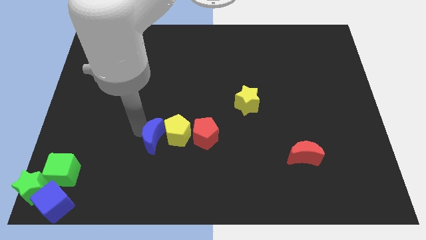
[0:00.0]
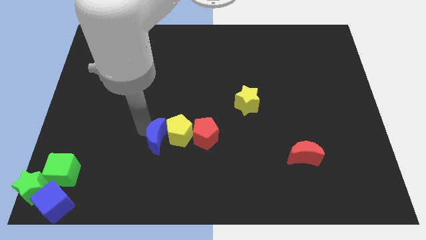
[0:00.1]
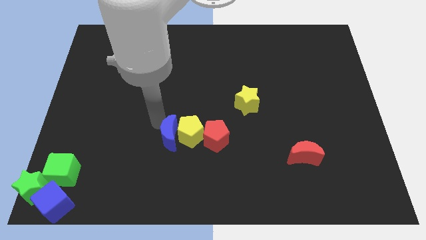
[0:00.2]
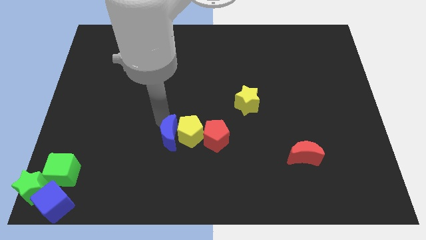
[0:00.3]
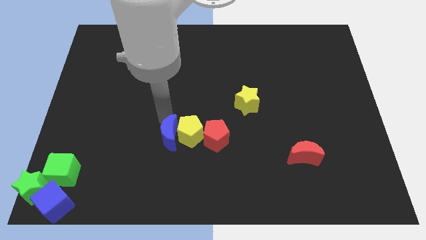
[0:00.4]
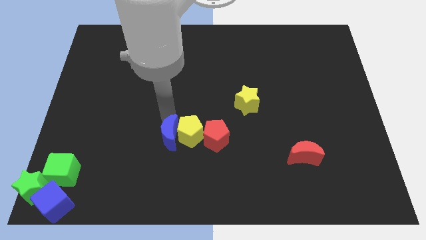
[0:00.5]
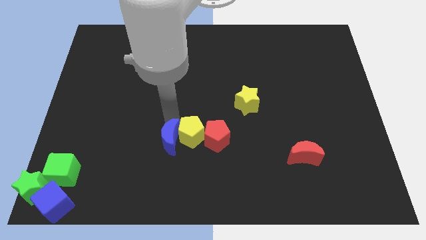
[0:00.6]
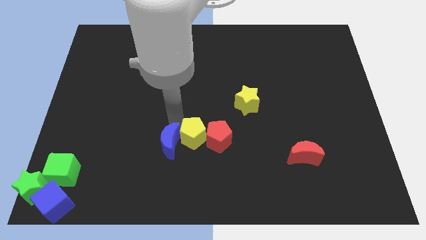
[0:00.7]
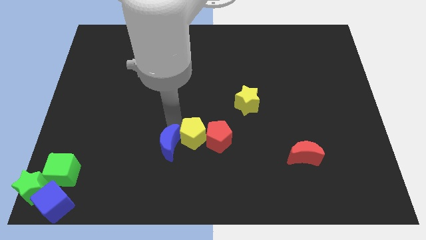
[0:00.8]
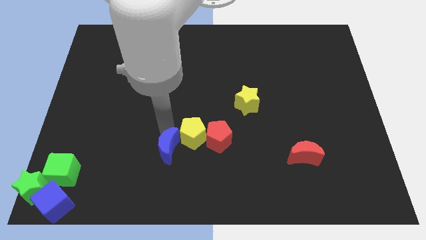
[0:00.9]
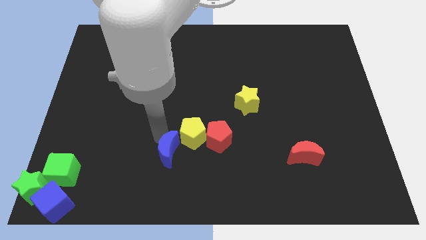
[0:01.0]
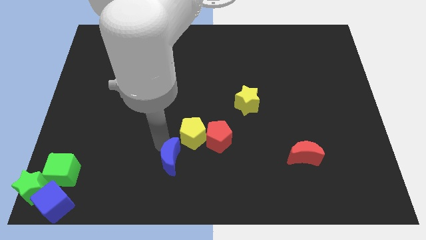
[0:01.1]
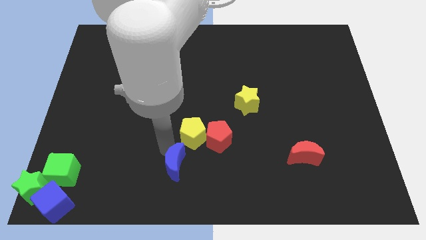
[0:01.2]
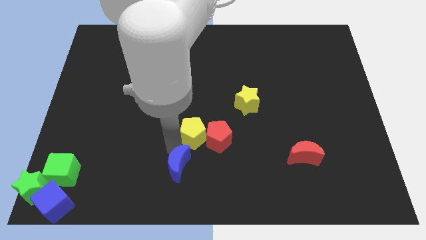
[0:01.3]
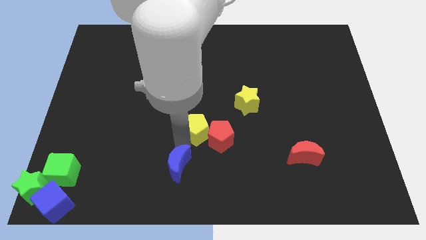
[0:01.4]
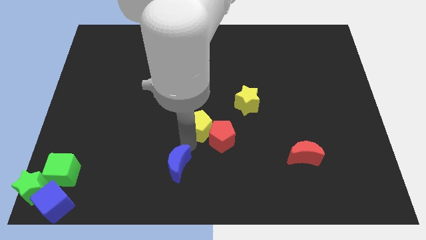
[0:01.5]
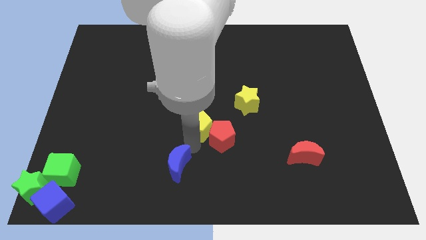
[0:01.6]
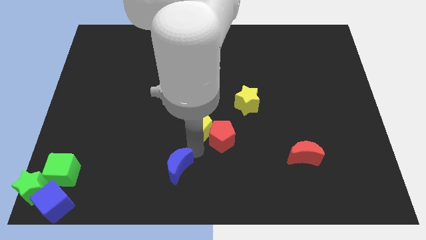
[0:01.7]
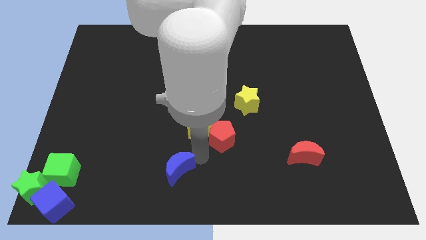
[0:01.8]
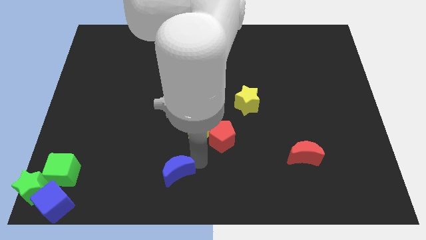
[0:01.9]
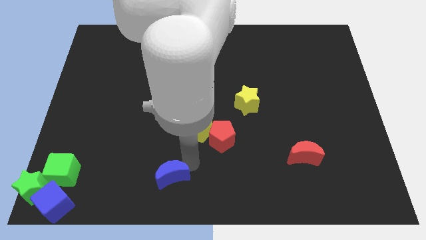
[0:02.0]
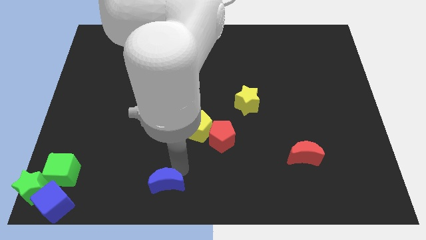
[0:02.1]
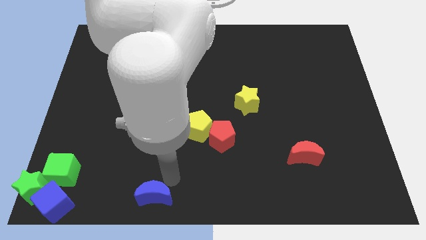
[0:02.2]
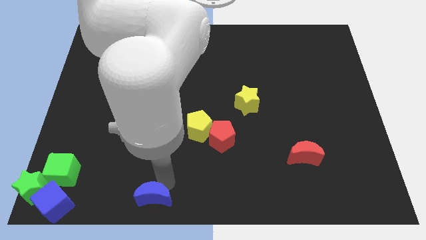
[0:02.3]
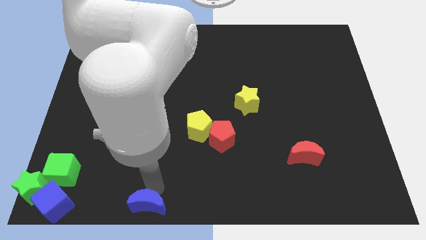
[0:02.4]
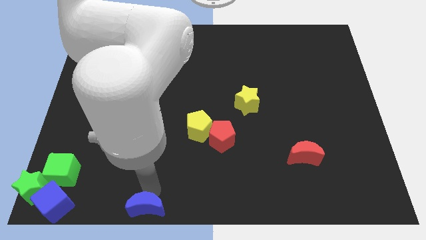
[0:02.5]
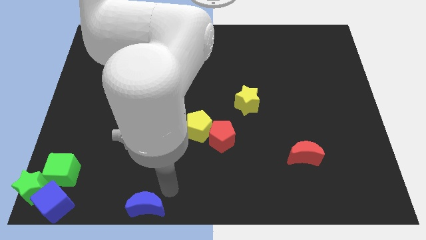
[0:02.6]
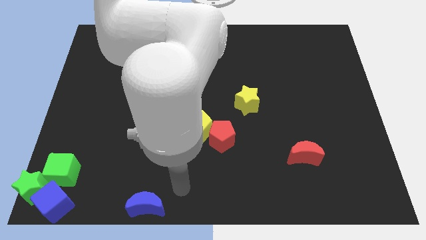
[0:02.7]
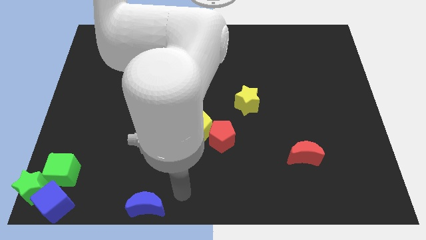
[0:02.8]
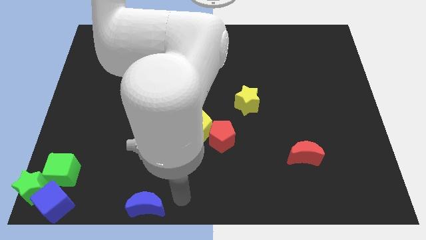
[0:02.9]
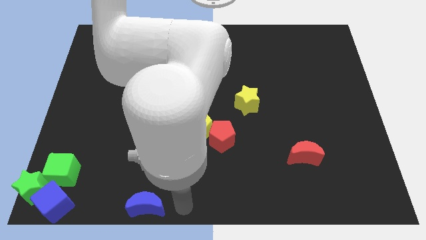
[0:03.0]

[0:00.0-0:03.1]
push the blue crescent to the right of the blue cube

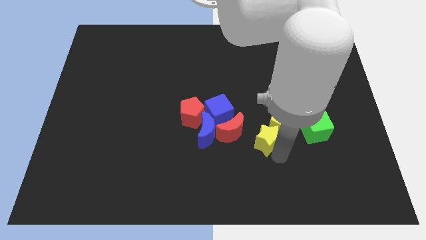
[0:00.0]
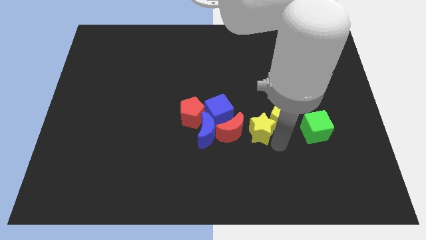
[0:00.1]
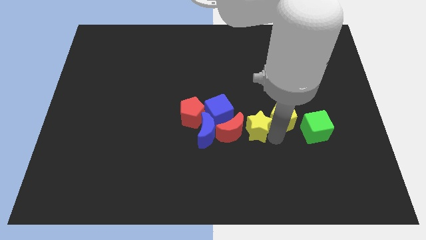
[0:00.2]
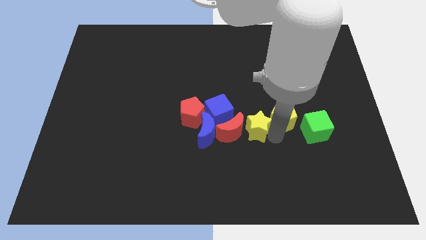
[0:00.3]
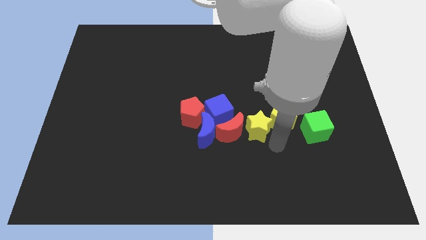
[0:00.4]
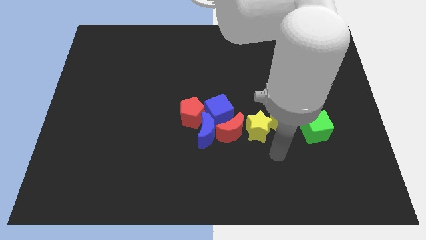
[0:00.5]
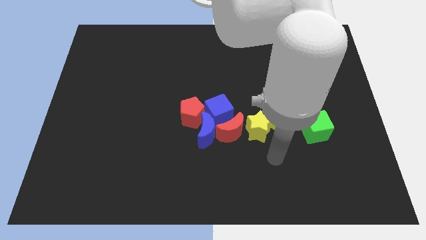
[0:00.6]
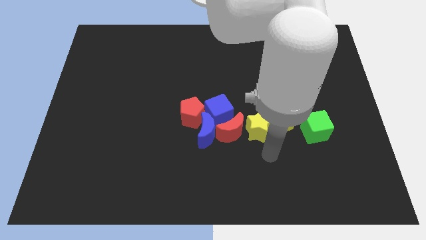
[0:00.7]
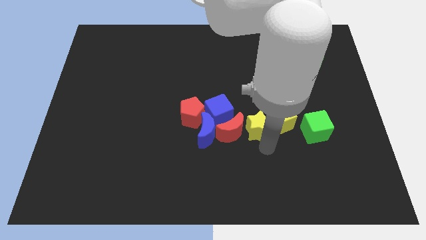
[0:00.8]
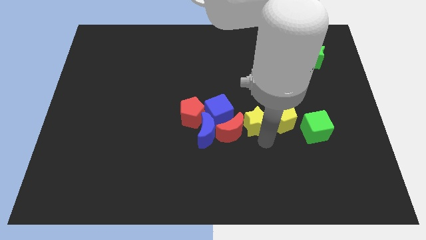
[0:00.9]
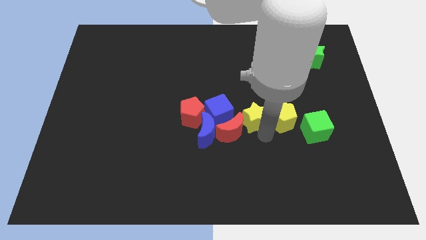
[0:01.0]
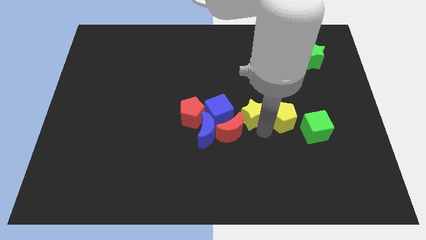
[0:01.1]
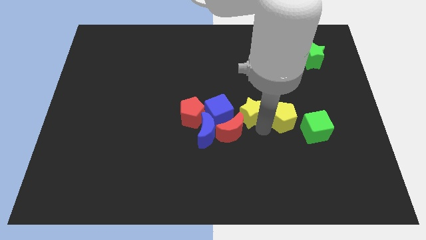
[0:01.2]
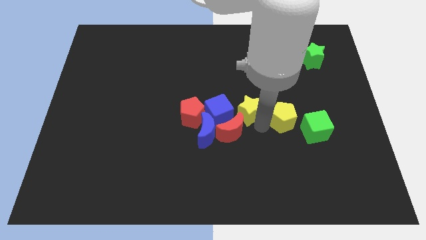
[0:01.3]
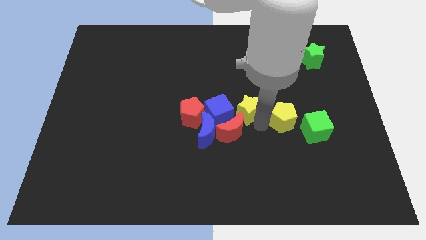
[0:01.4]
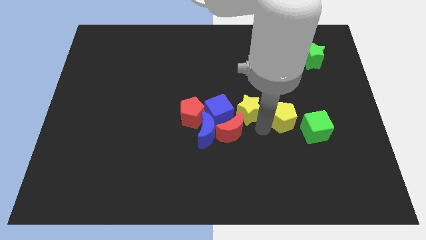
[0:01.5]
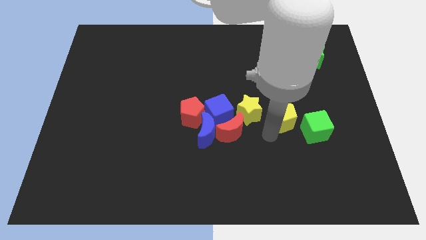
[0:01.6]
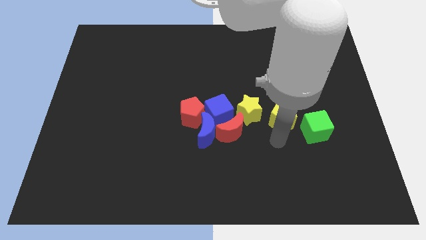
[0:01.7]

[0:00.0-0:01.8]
move yellow star to the right of the blue cube

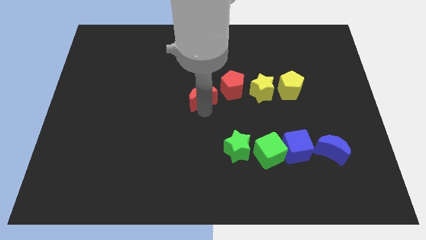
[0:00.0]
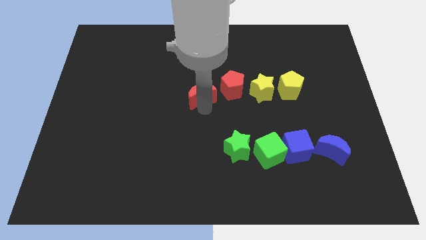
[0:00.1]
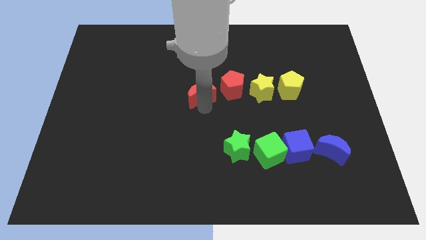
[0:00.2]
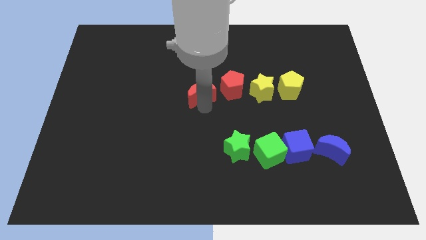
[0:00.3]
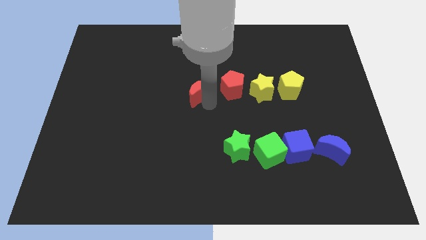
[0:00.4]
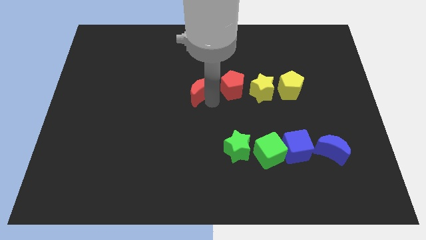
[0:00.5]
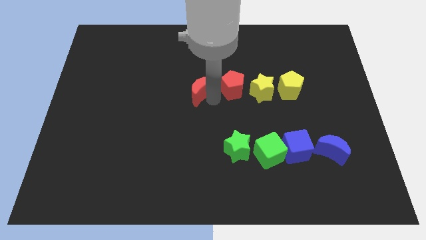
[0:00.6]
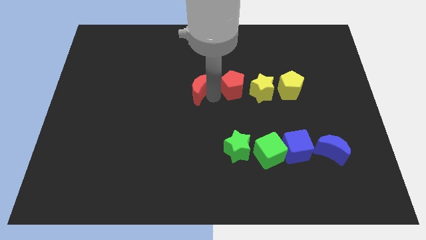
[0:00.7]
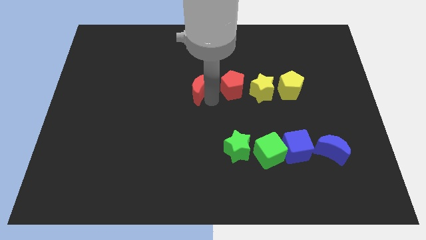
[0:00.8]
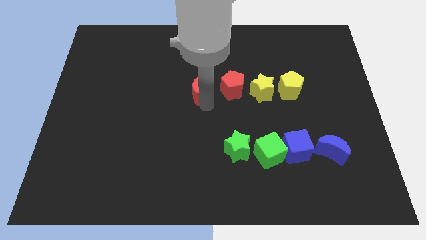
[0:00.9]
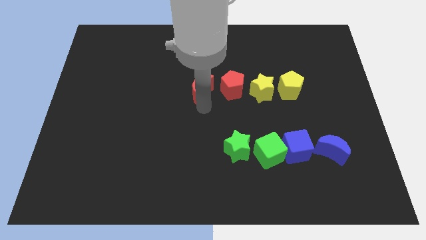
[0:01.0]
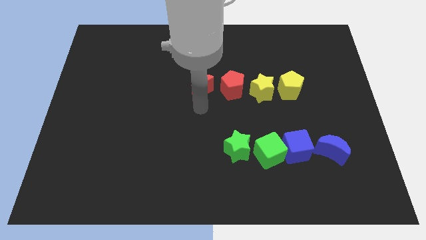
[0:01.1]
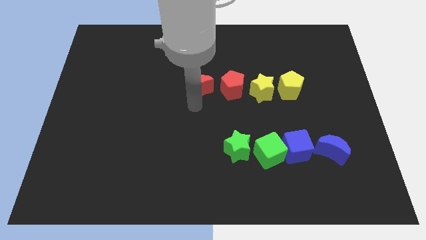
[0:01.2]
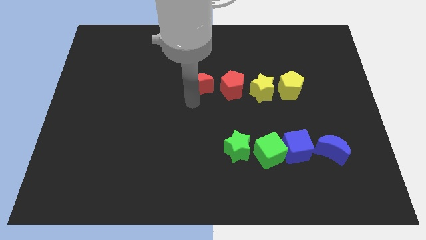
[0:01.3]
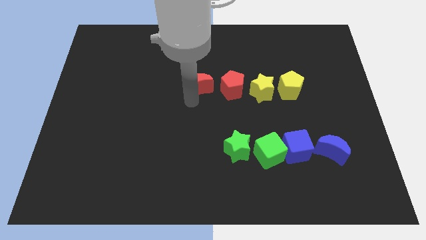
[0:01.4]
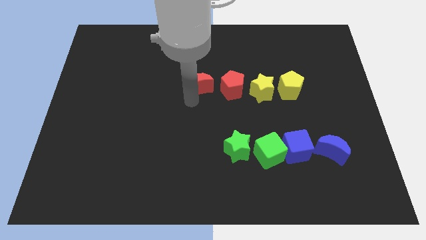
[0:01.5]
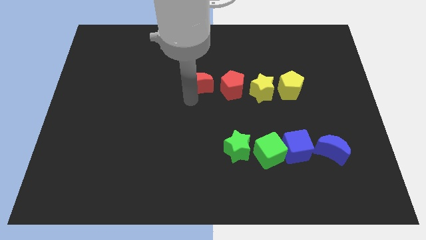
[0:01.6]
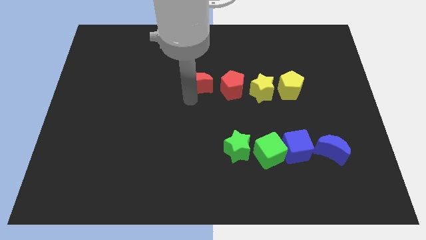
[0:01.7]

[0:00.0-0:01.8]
put the red crescent on the left side of the red pentagon

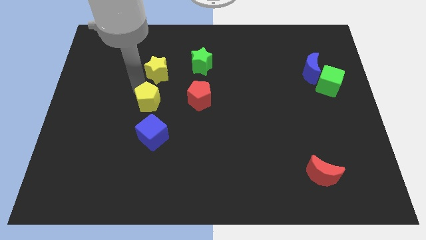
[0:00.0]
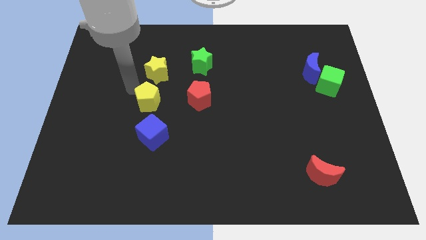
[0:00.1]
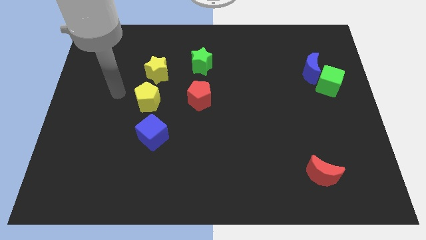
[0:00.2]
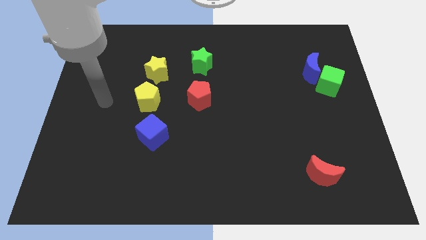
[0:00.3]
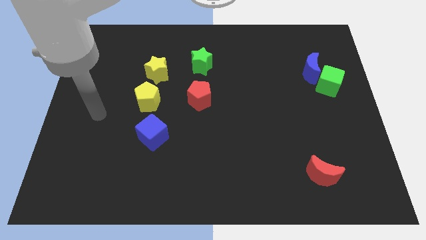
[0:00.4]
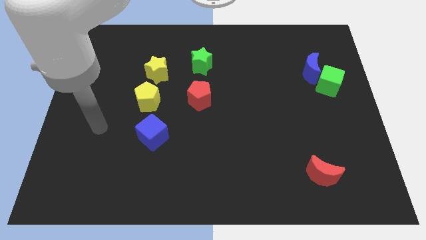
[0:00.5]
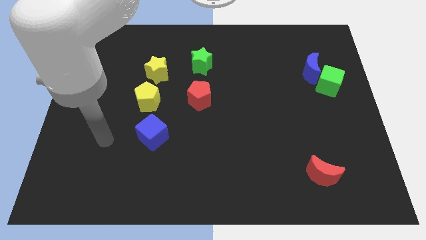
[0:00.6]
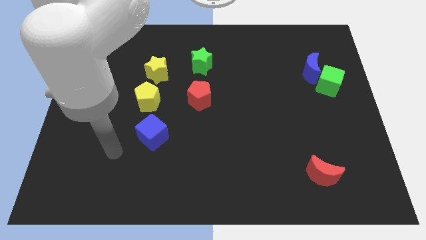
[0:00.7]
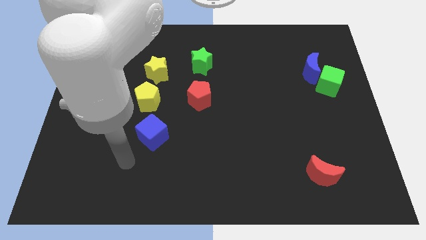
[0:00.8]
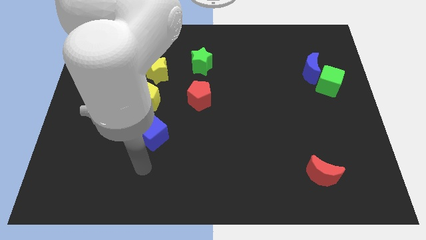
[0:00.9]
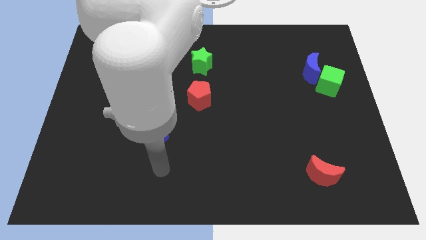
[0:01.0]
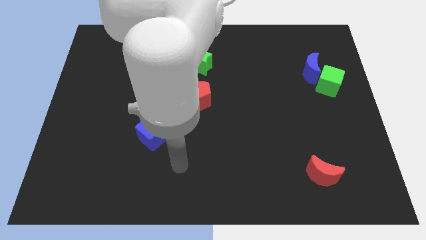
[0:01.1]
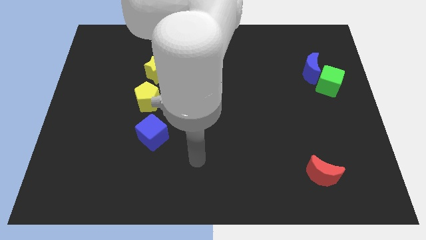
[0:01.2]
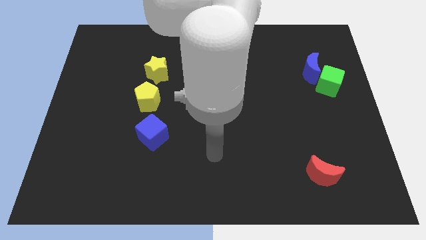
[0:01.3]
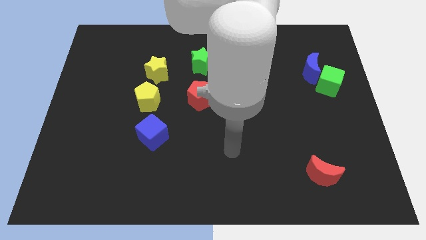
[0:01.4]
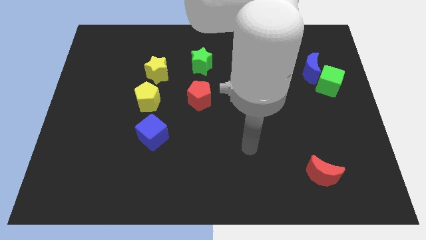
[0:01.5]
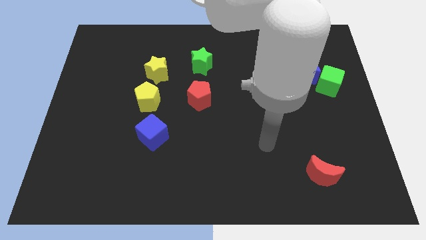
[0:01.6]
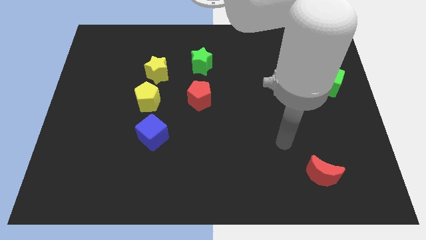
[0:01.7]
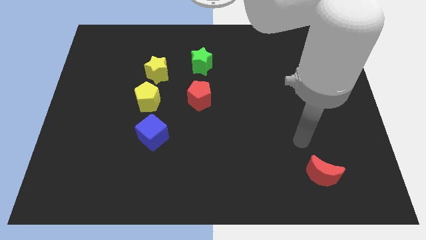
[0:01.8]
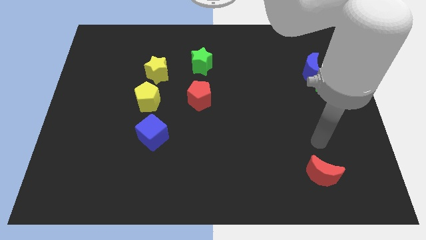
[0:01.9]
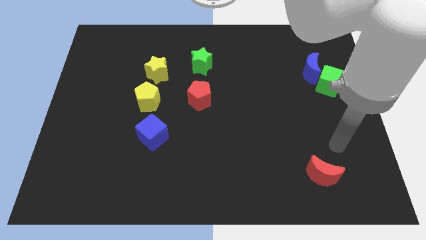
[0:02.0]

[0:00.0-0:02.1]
point your hand above the red moon

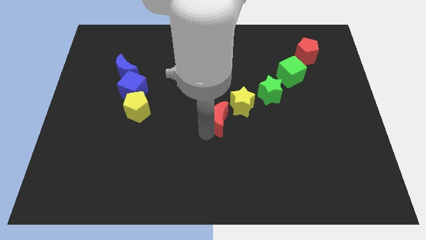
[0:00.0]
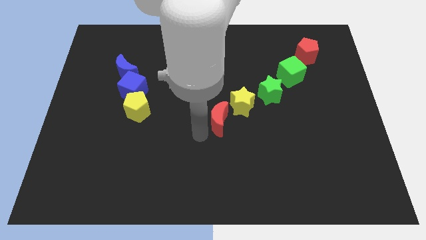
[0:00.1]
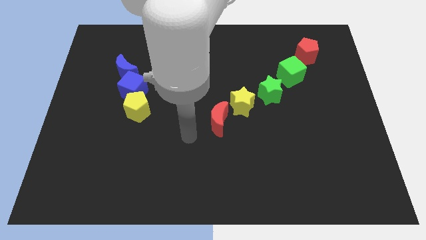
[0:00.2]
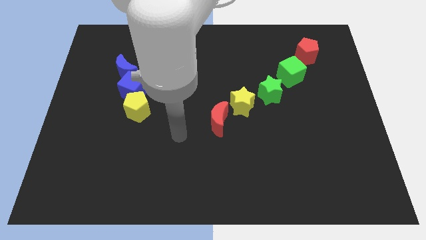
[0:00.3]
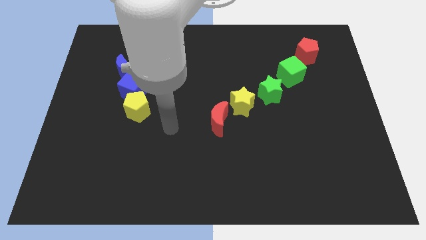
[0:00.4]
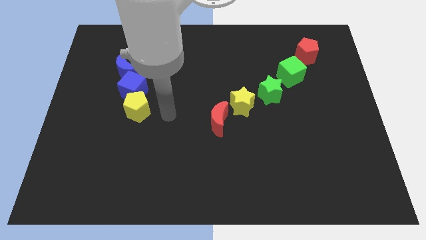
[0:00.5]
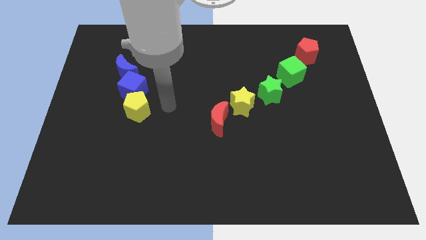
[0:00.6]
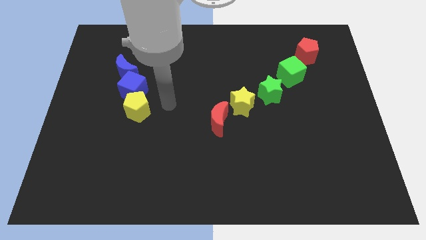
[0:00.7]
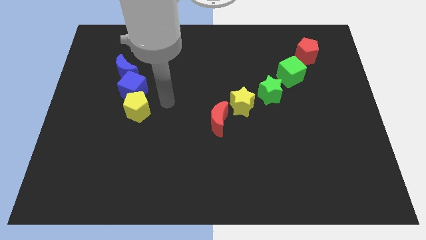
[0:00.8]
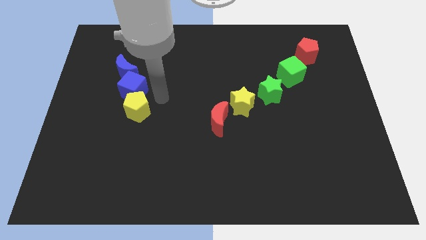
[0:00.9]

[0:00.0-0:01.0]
go away from the red moon
